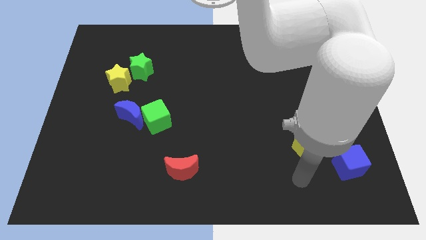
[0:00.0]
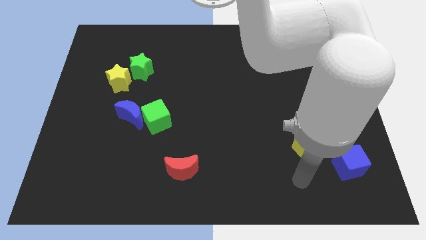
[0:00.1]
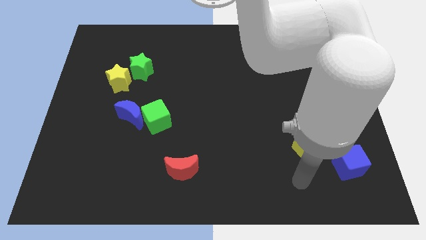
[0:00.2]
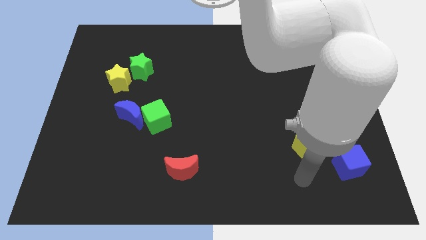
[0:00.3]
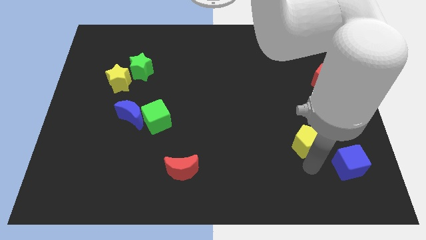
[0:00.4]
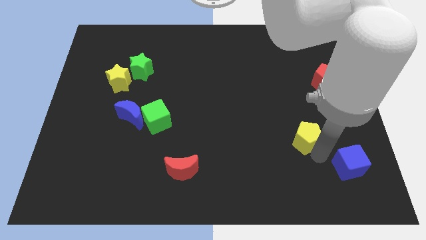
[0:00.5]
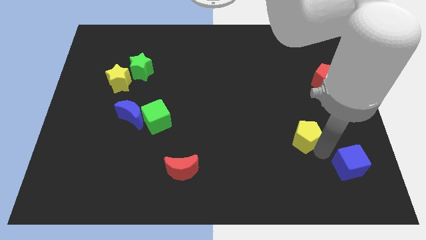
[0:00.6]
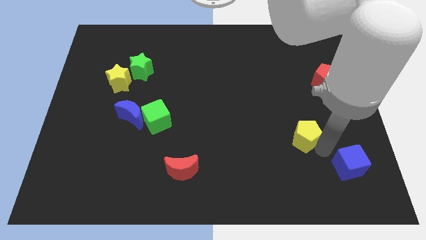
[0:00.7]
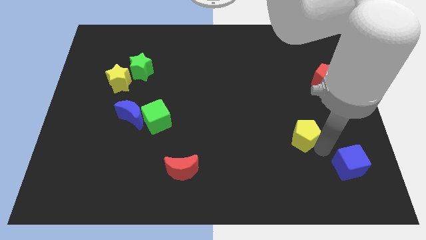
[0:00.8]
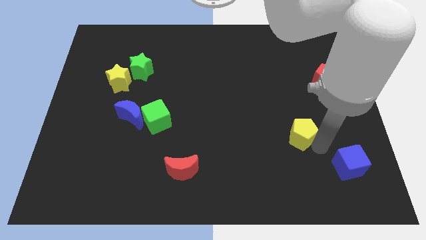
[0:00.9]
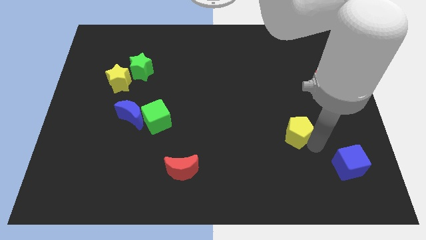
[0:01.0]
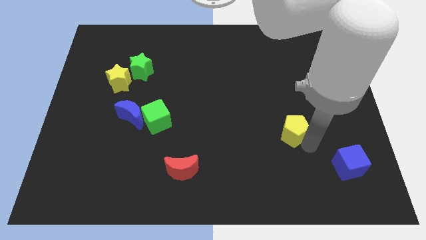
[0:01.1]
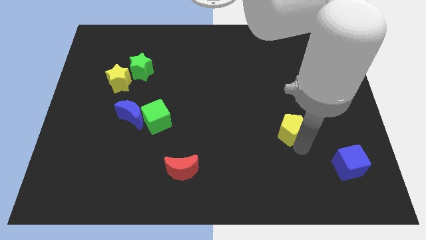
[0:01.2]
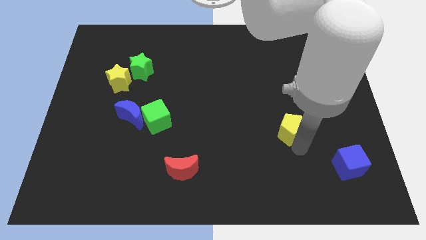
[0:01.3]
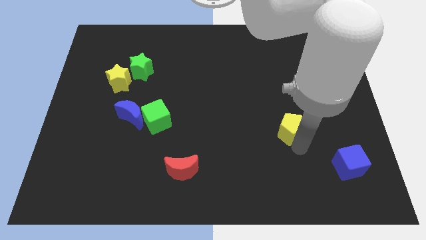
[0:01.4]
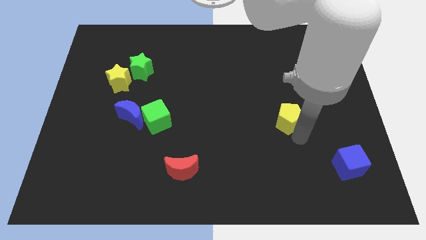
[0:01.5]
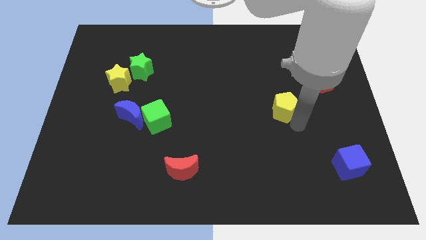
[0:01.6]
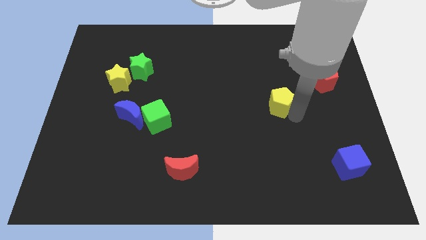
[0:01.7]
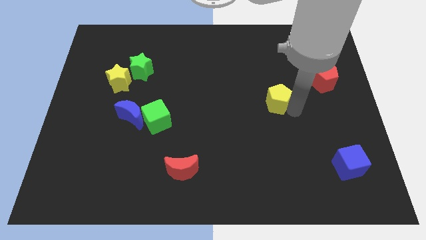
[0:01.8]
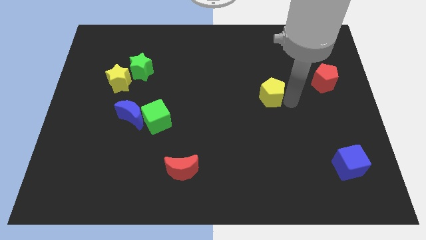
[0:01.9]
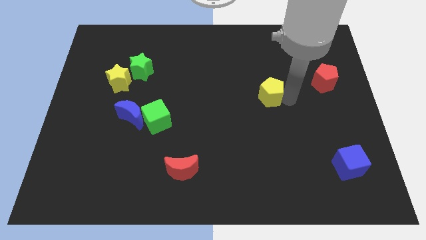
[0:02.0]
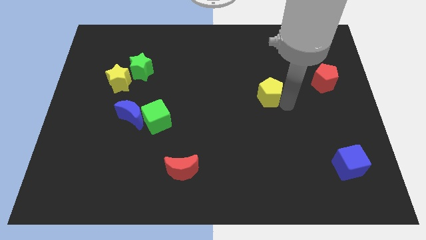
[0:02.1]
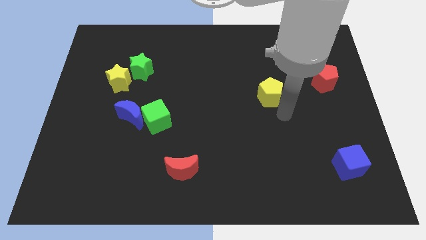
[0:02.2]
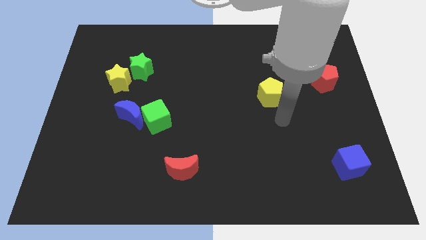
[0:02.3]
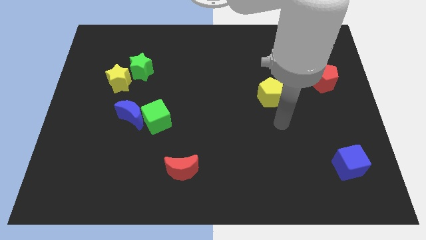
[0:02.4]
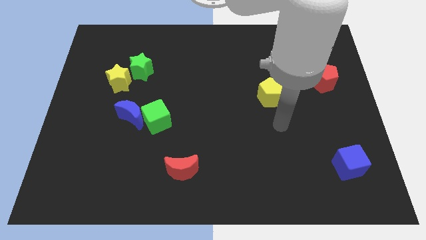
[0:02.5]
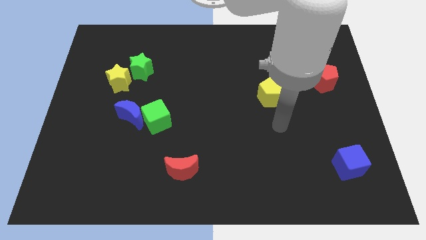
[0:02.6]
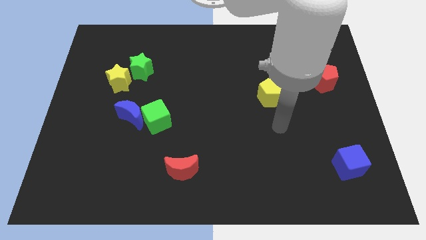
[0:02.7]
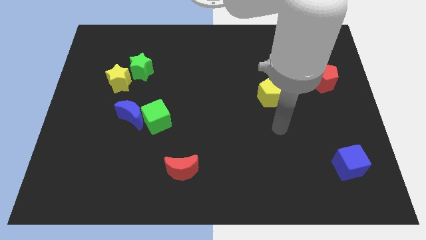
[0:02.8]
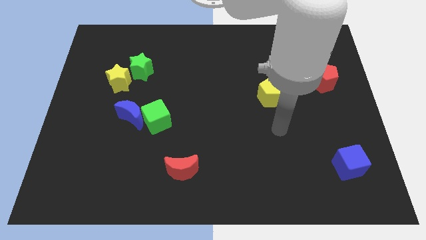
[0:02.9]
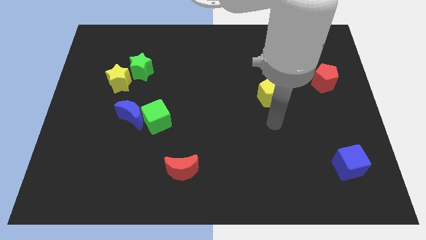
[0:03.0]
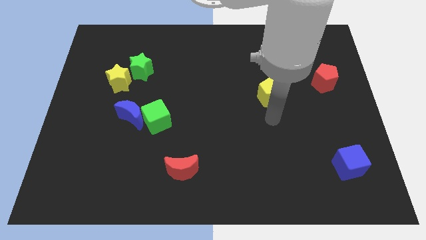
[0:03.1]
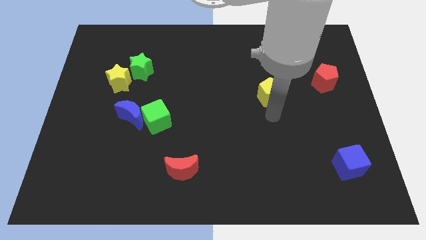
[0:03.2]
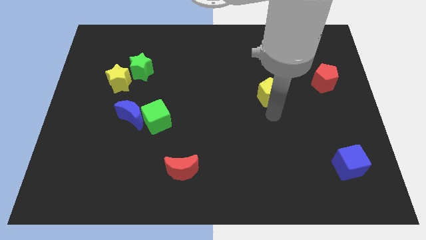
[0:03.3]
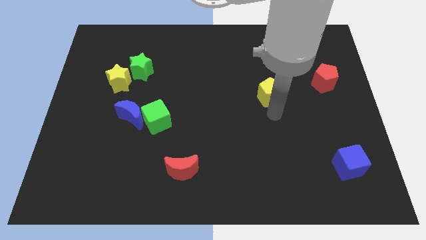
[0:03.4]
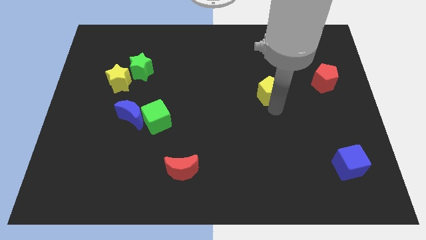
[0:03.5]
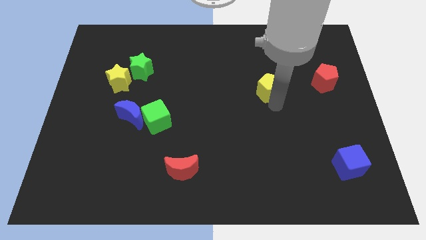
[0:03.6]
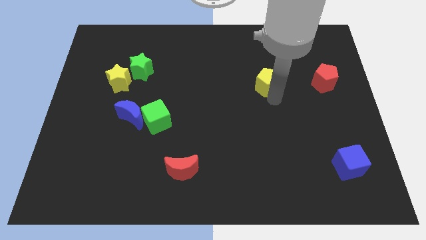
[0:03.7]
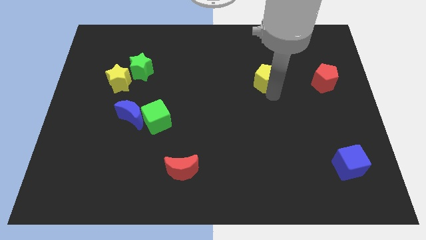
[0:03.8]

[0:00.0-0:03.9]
push the yellow pentagon towards the top of the board

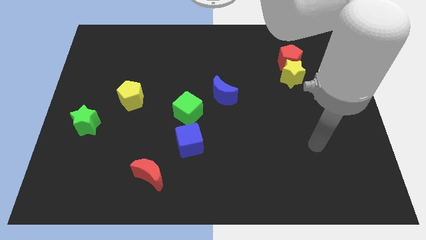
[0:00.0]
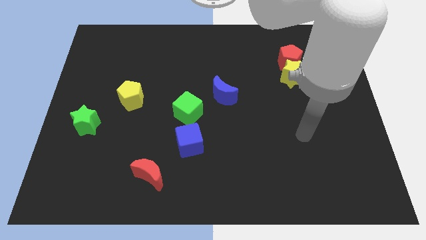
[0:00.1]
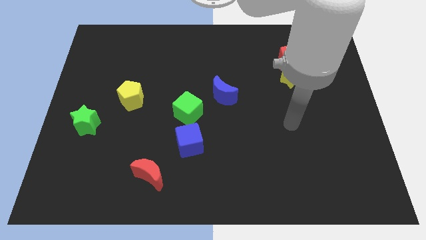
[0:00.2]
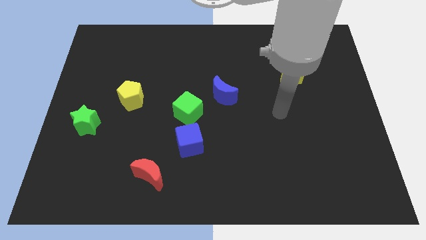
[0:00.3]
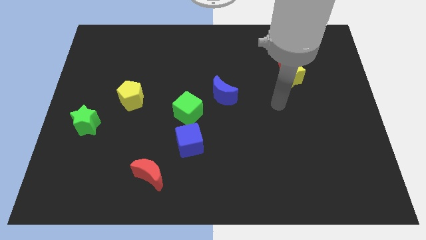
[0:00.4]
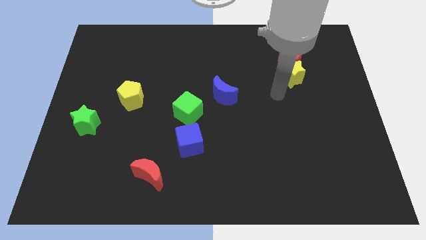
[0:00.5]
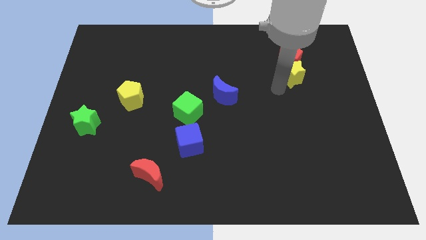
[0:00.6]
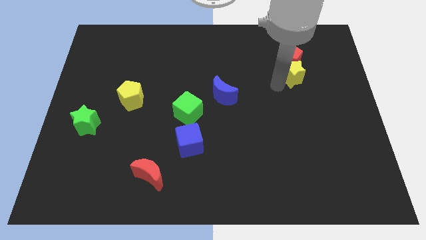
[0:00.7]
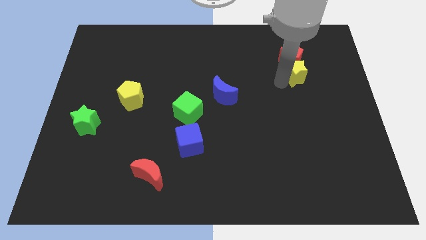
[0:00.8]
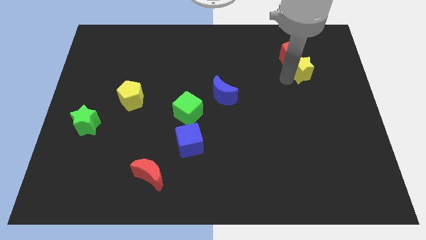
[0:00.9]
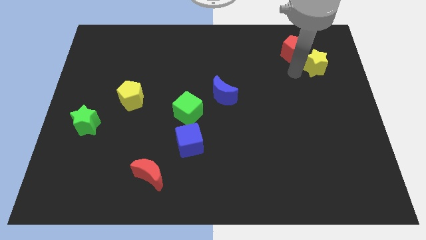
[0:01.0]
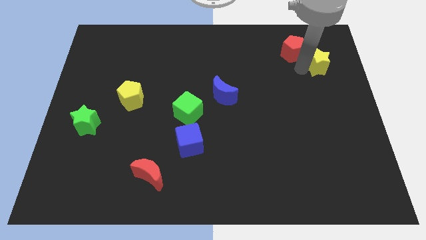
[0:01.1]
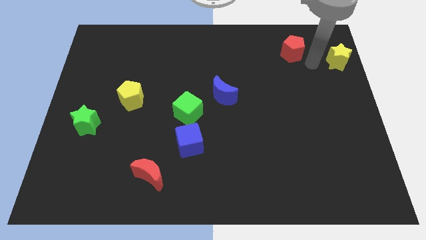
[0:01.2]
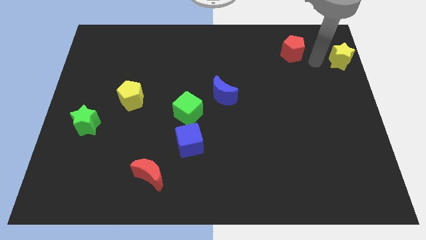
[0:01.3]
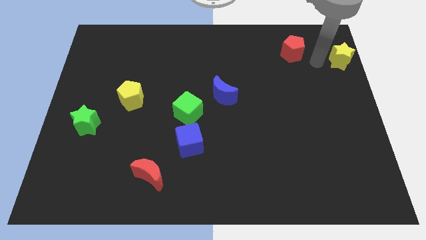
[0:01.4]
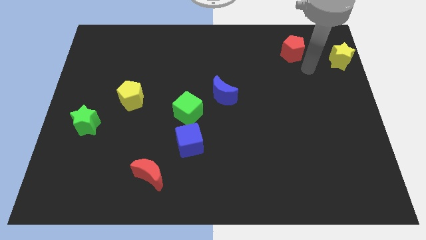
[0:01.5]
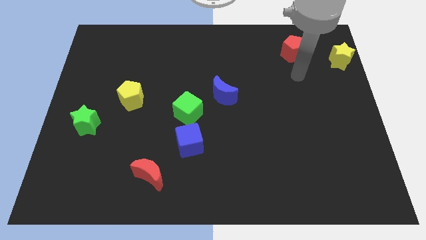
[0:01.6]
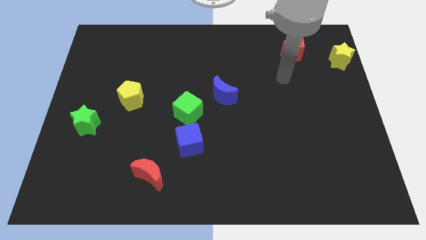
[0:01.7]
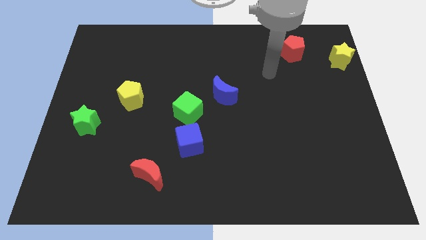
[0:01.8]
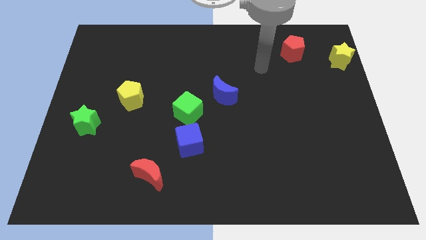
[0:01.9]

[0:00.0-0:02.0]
push the yellow star towards the top right corner of the board

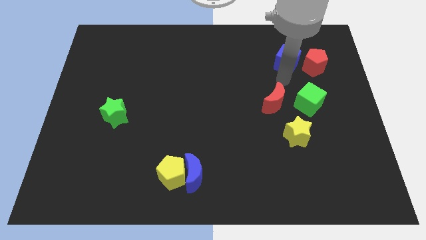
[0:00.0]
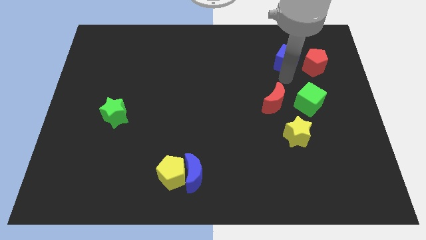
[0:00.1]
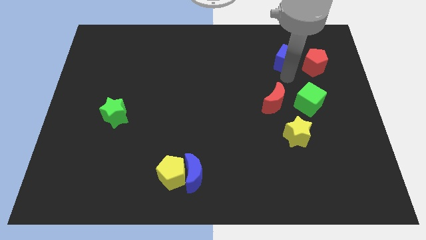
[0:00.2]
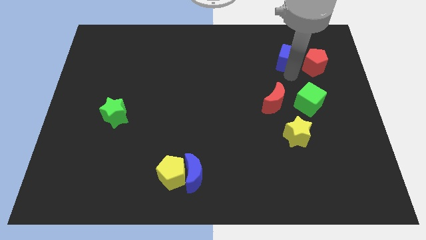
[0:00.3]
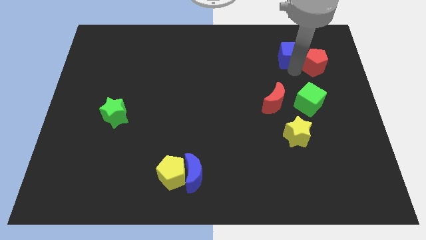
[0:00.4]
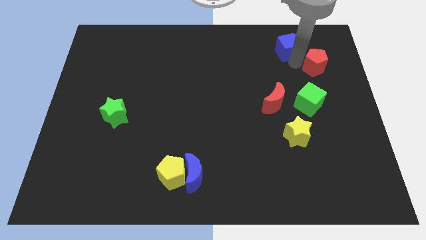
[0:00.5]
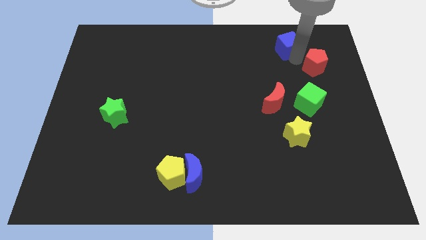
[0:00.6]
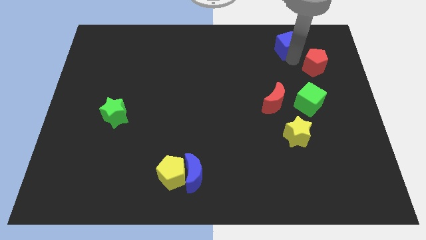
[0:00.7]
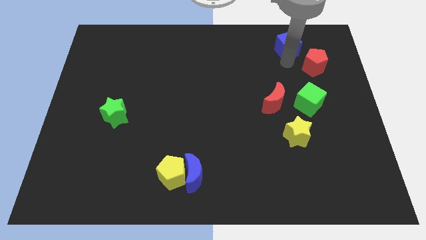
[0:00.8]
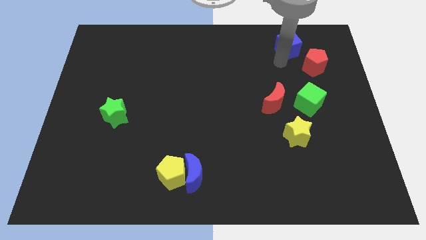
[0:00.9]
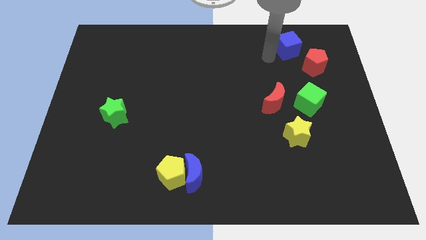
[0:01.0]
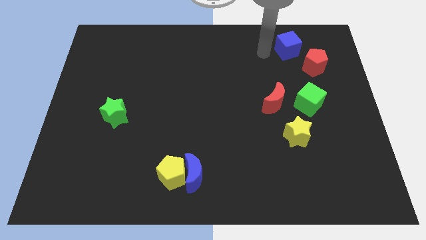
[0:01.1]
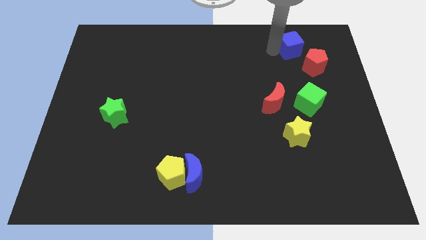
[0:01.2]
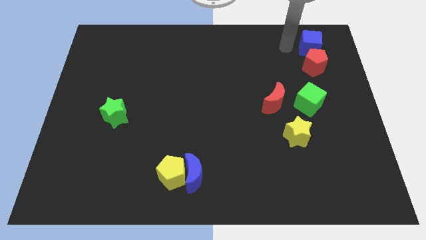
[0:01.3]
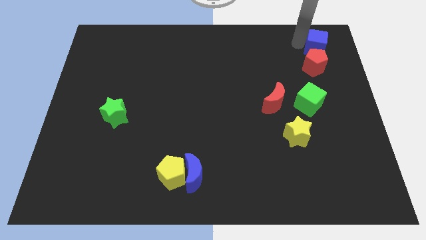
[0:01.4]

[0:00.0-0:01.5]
place the blue cube at the top of red pentagon

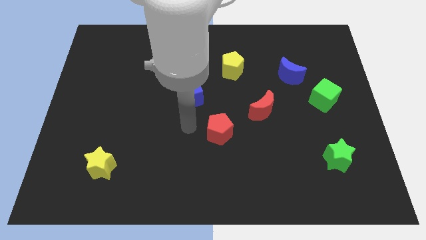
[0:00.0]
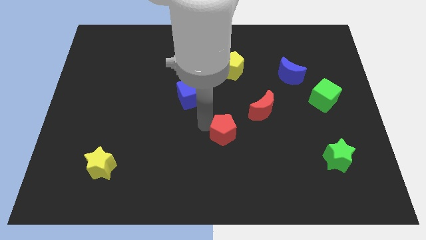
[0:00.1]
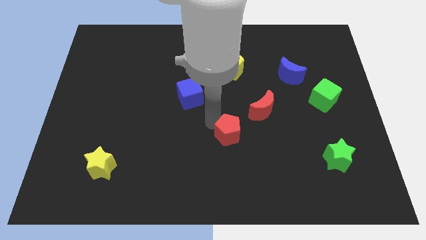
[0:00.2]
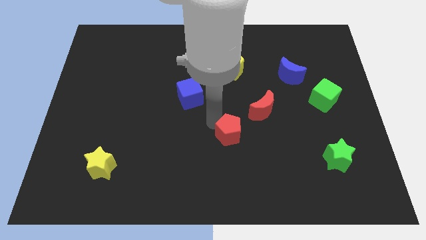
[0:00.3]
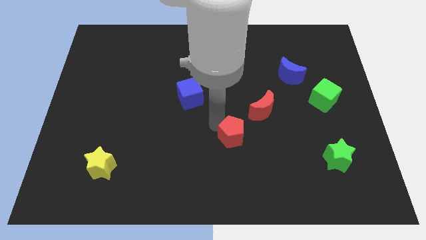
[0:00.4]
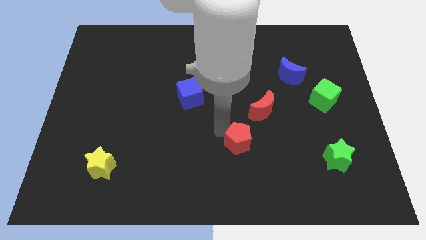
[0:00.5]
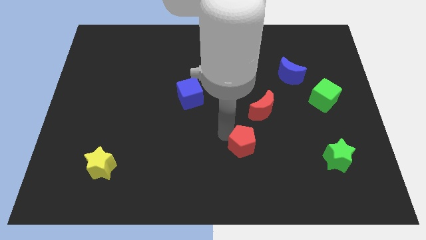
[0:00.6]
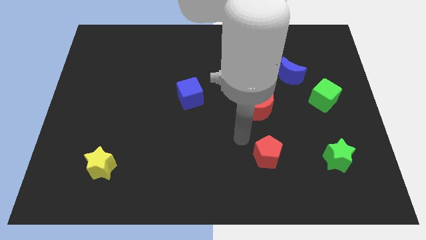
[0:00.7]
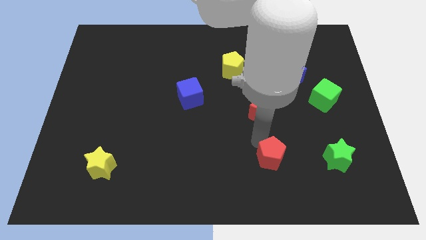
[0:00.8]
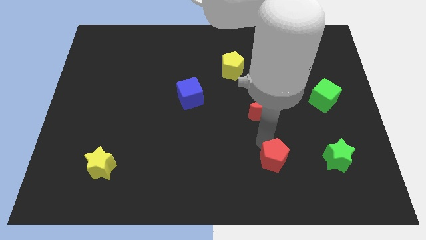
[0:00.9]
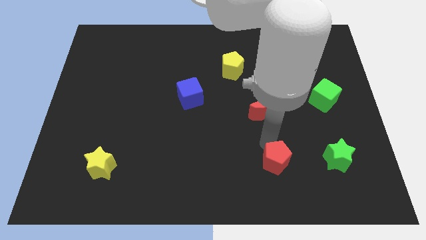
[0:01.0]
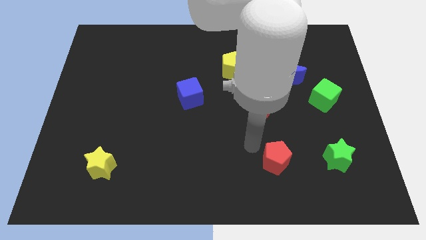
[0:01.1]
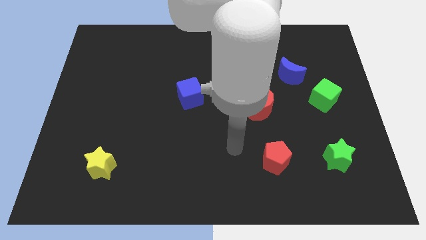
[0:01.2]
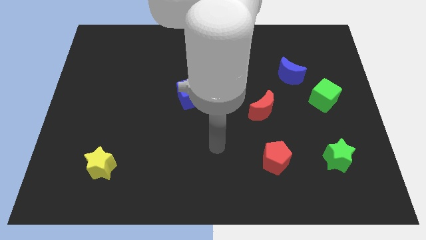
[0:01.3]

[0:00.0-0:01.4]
move the red pentagon to the horizontal left of the green star

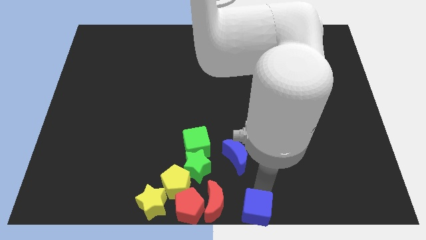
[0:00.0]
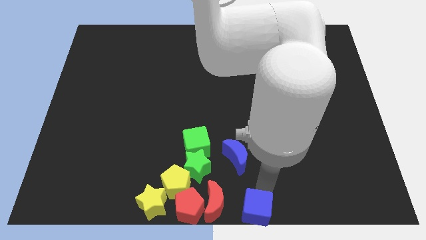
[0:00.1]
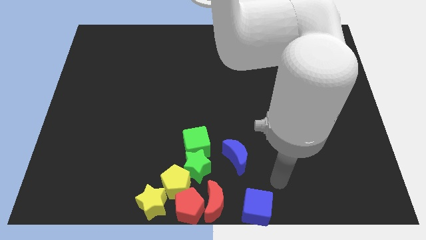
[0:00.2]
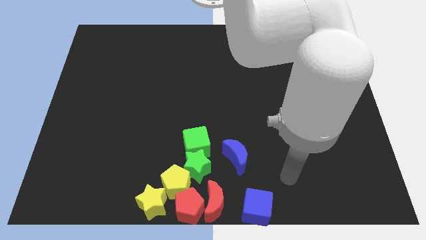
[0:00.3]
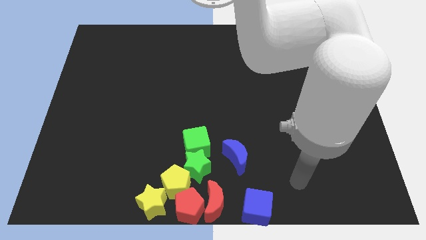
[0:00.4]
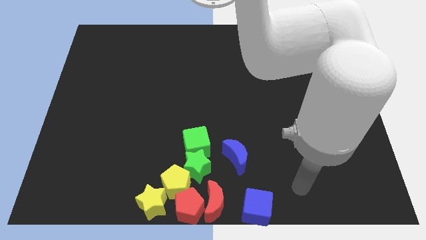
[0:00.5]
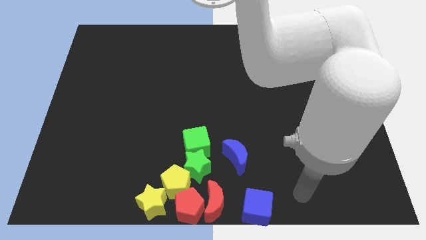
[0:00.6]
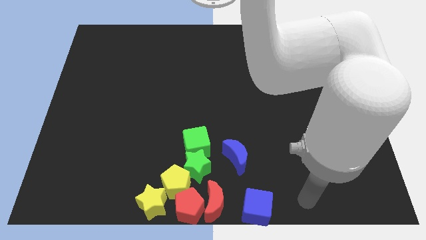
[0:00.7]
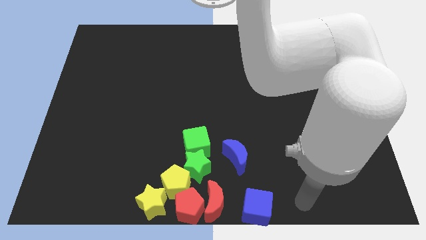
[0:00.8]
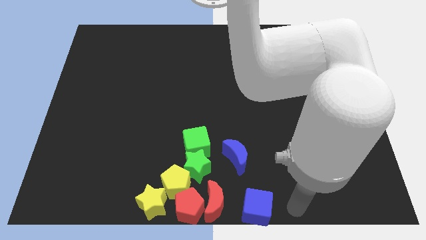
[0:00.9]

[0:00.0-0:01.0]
move your hand to the right of the blue cube
